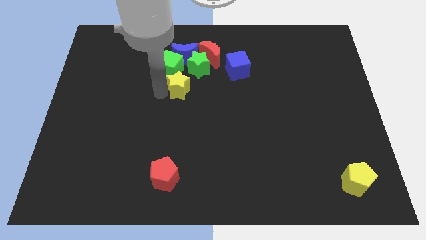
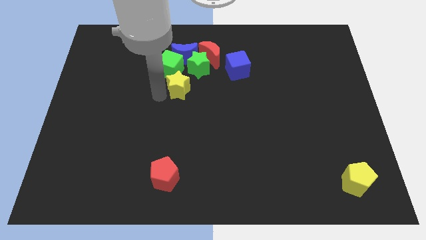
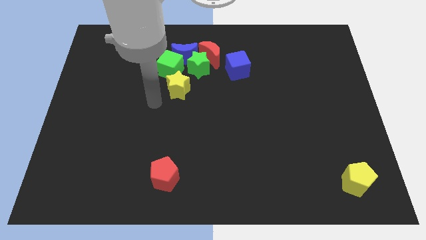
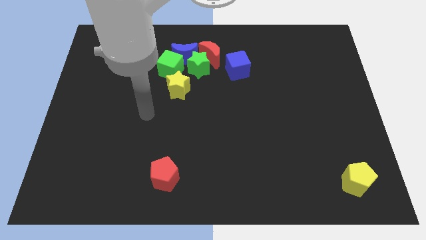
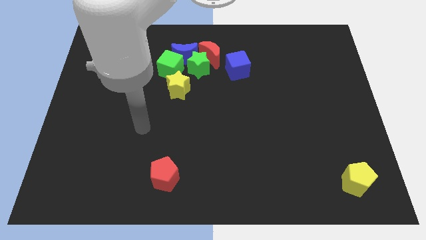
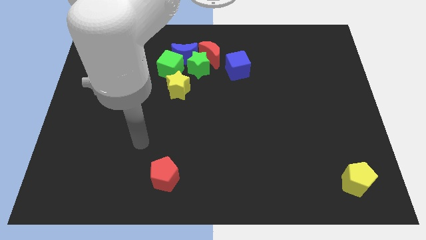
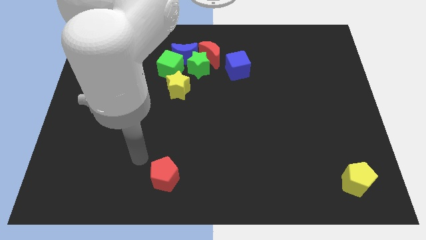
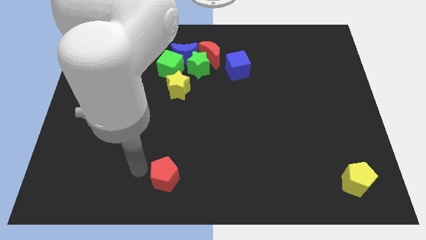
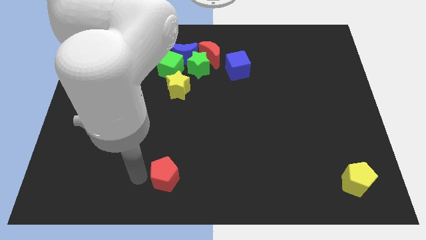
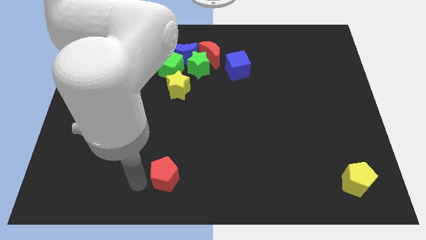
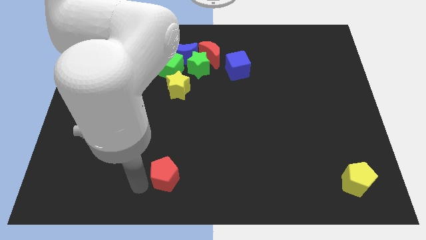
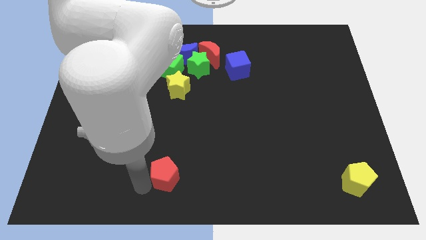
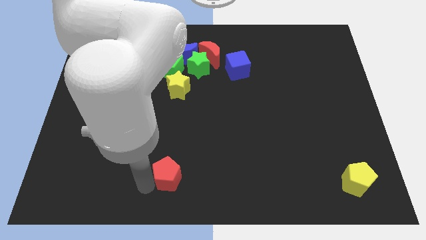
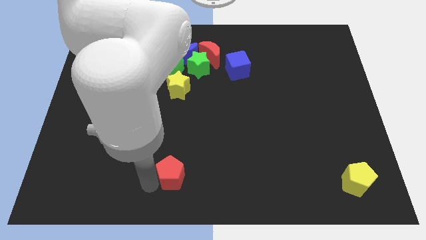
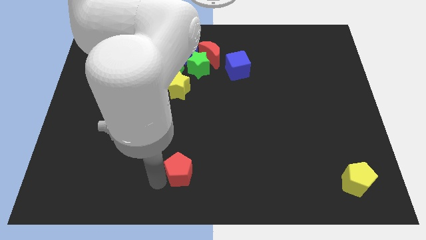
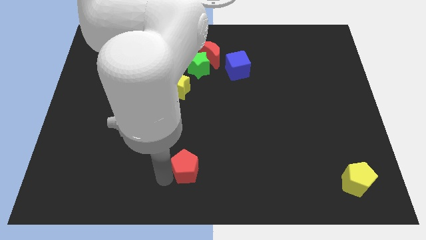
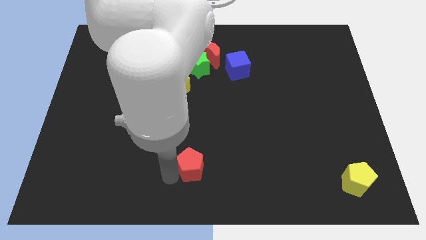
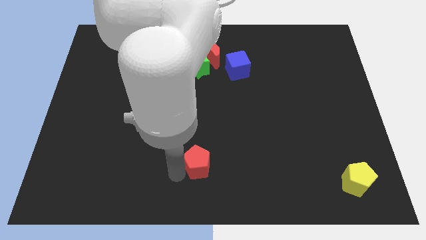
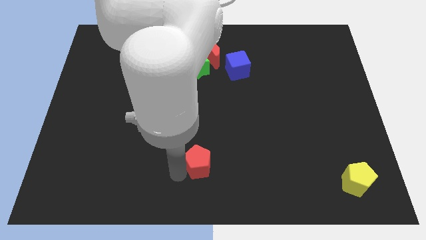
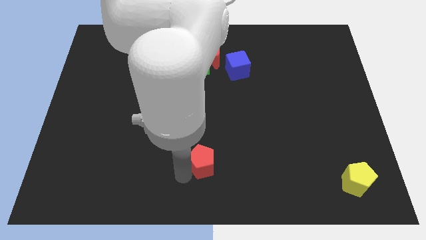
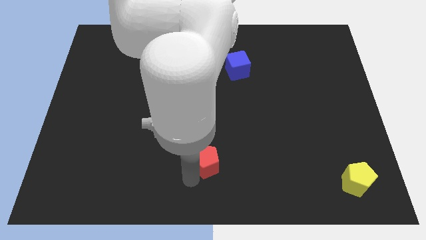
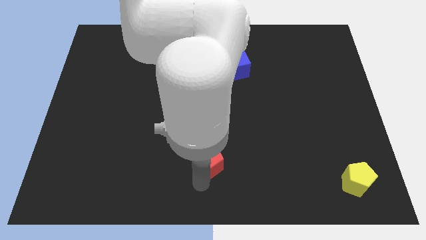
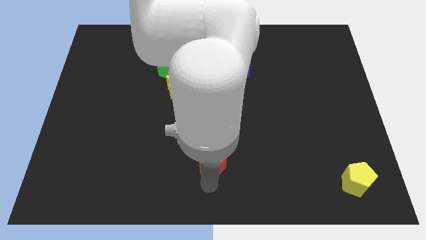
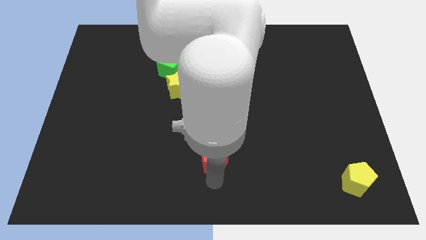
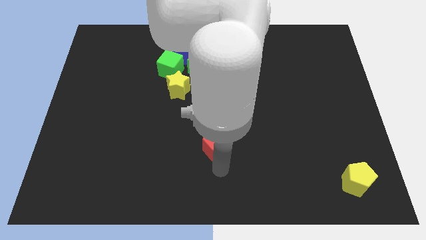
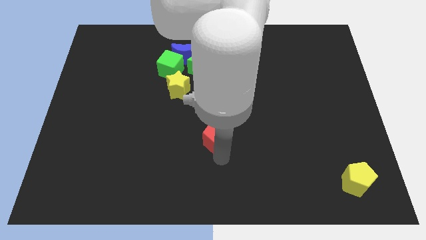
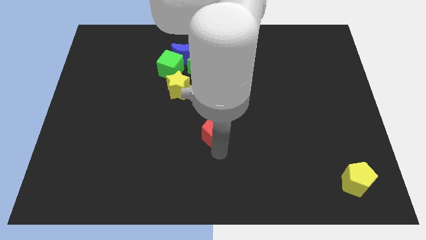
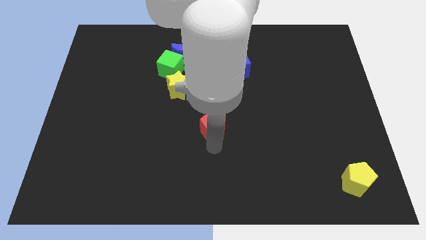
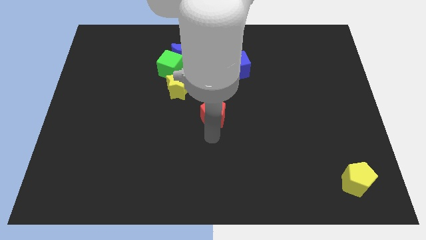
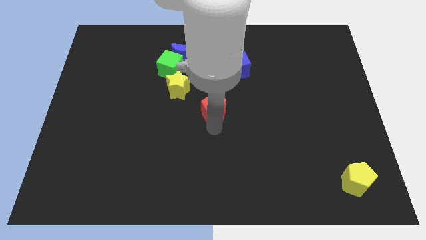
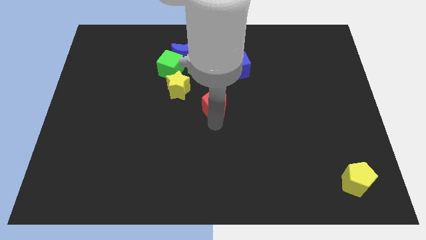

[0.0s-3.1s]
place the red pentagon diagonally to yellow star

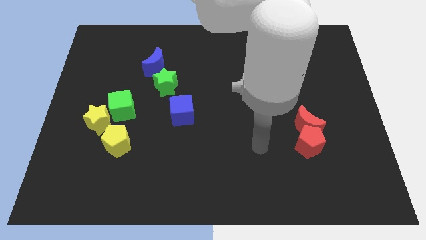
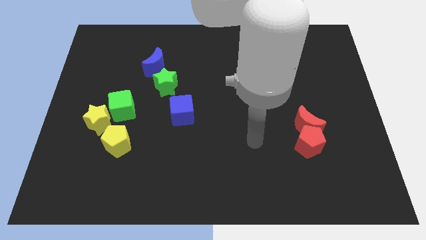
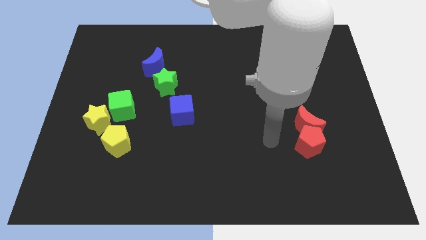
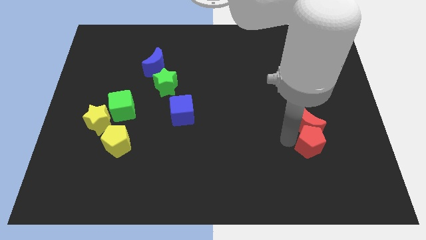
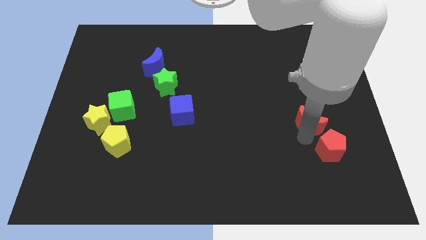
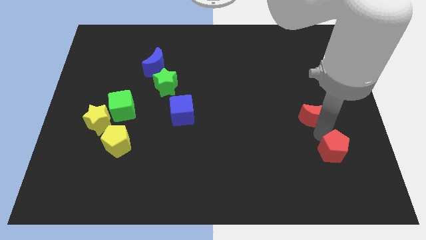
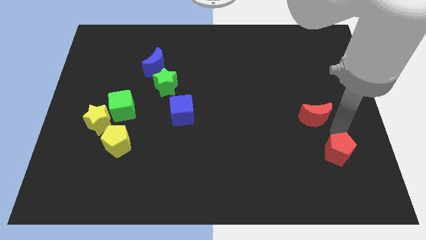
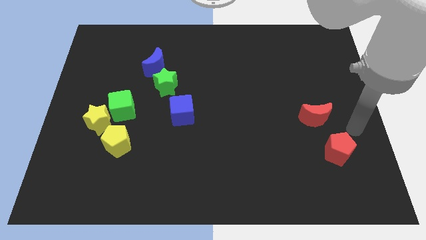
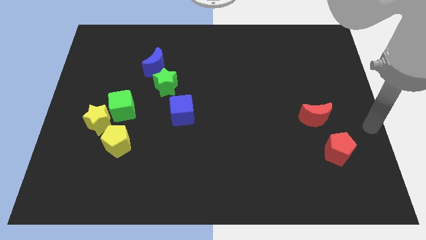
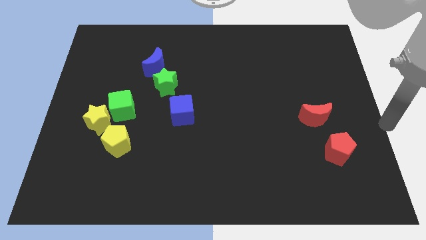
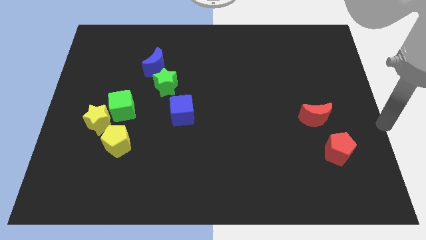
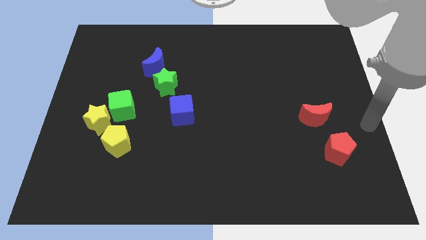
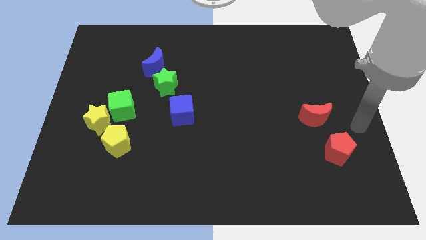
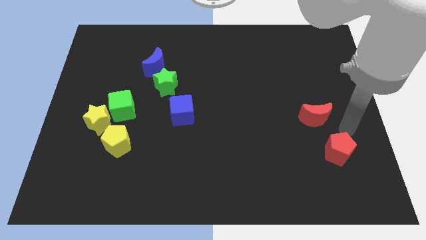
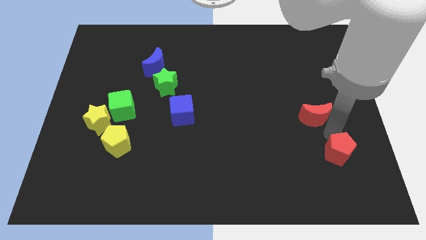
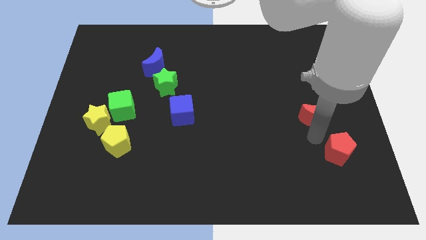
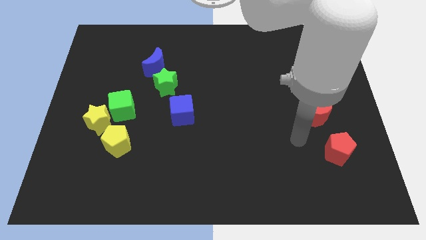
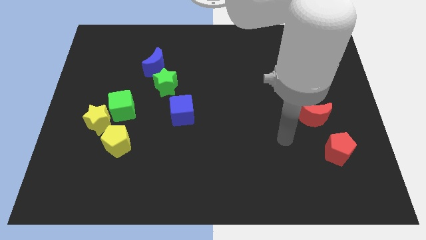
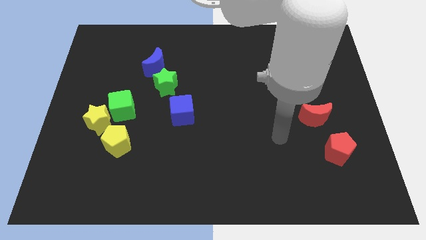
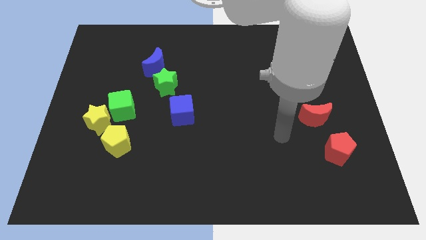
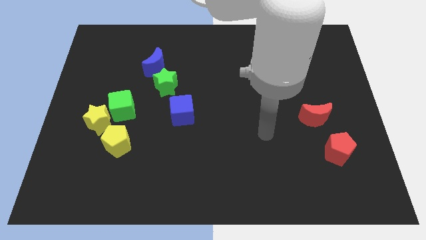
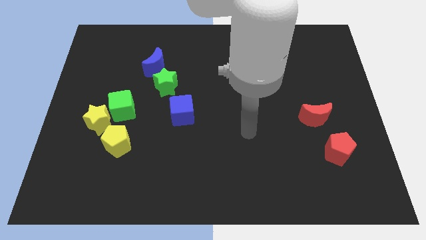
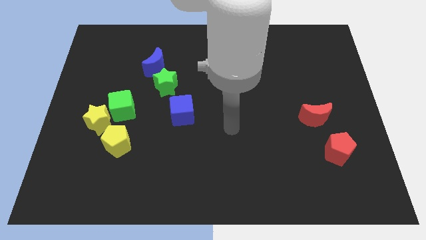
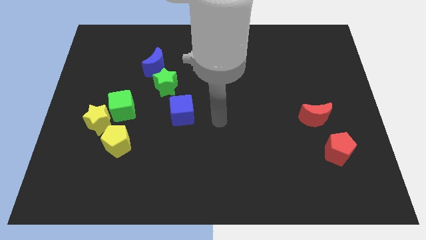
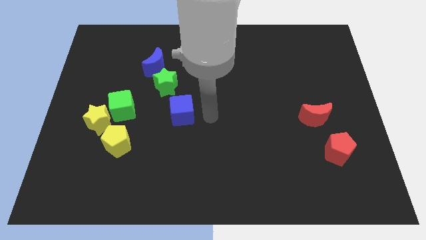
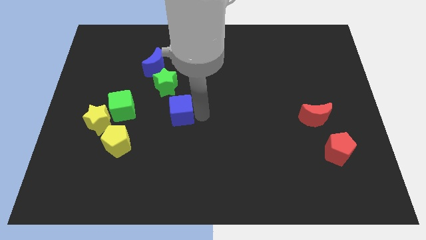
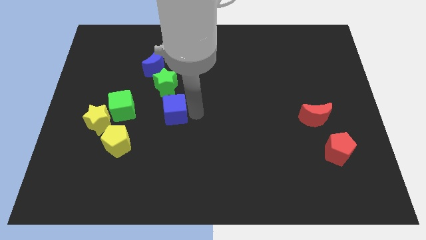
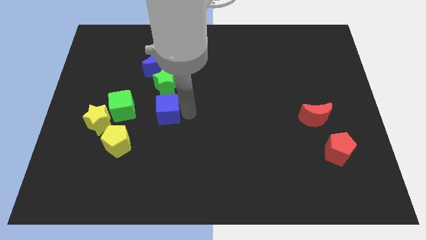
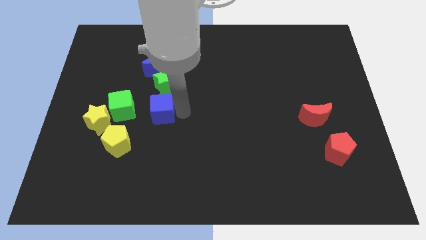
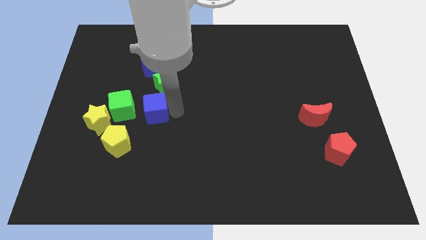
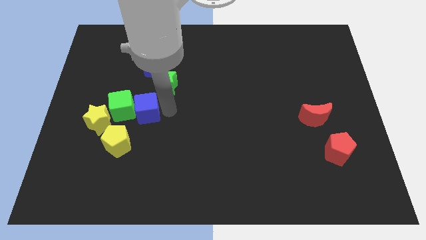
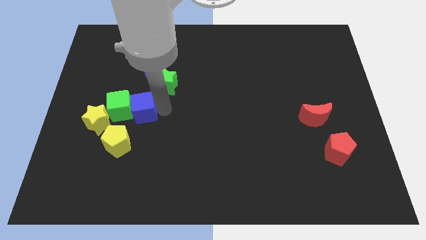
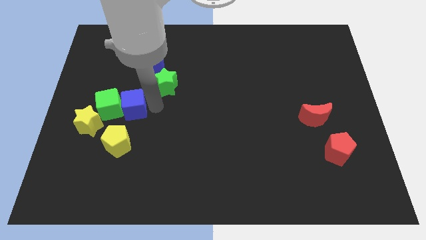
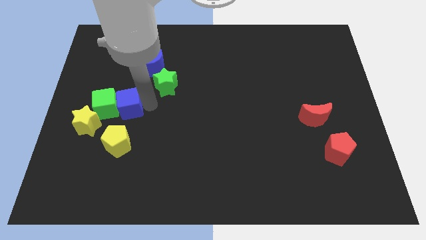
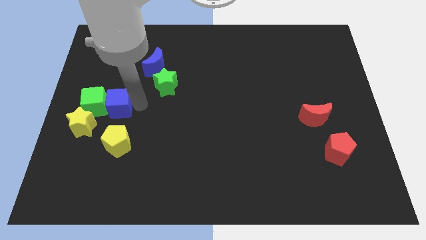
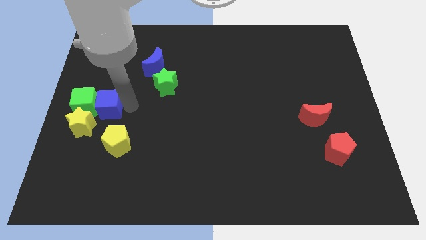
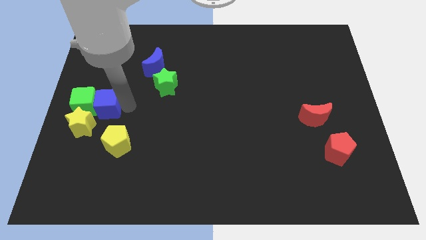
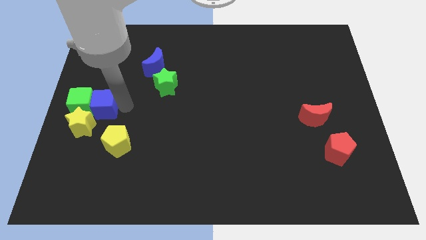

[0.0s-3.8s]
push the blue cube into green cube

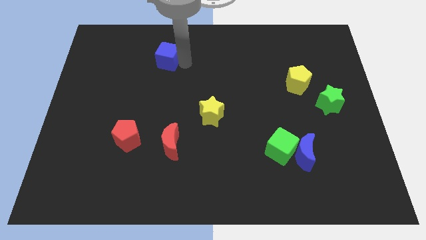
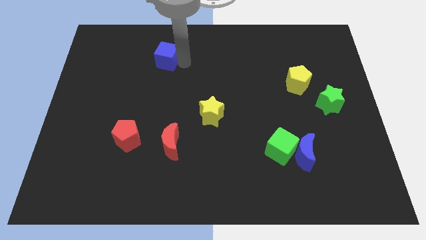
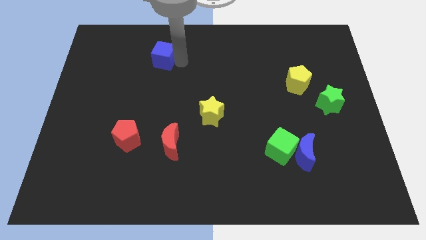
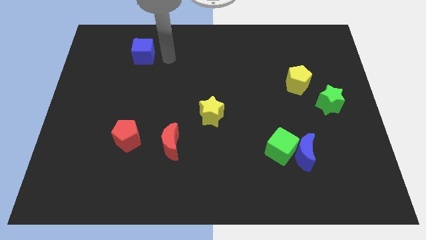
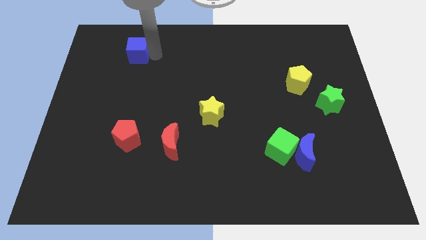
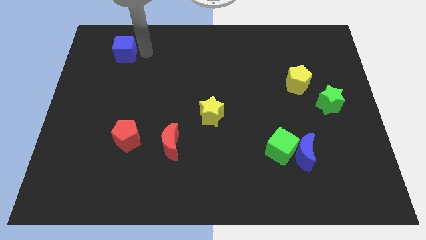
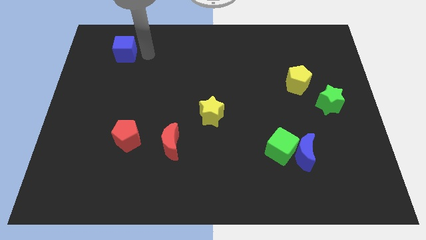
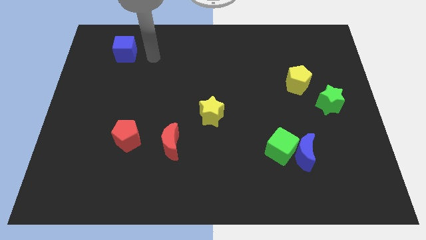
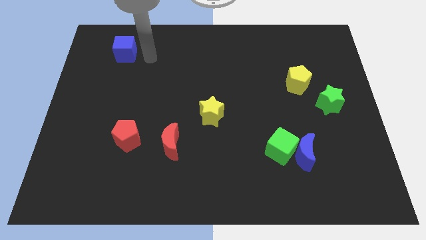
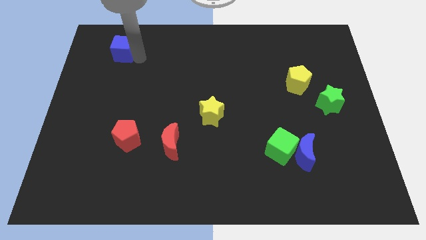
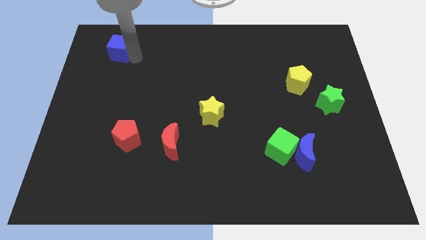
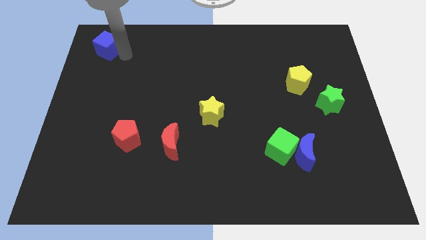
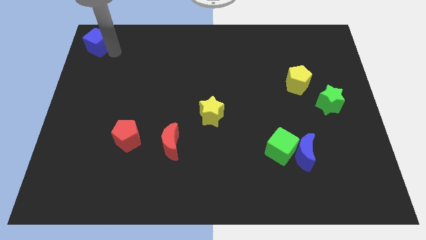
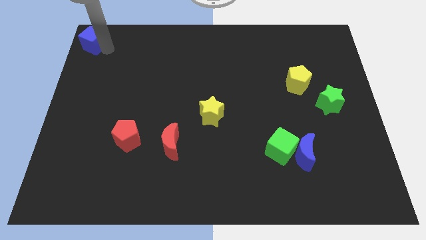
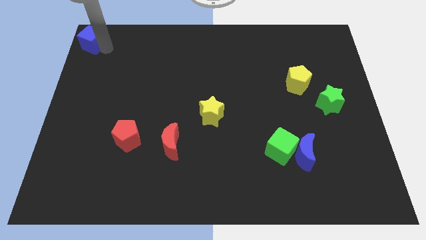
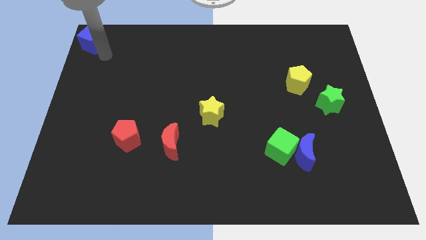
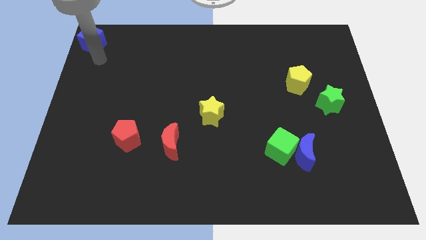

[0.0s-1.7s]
place blue cube to the top left corner of the board

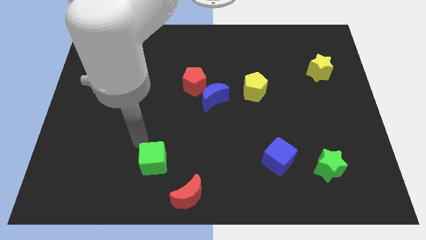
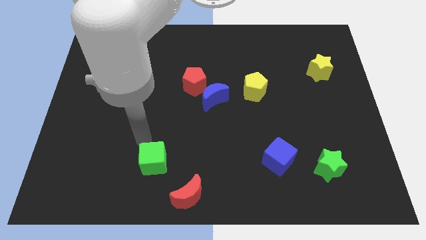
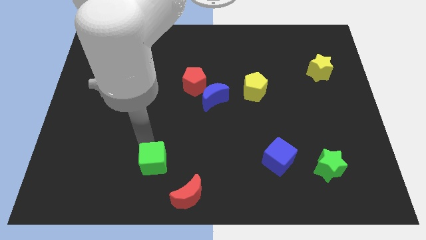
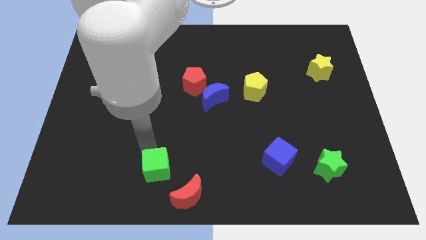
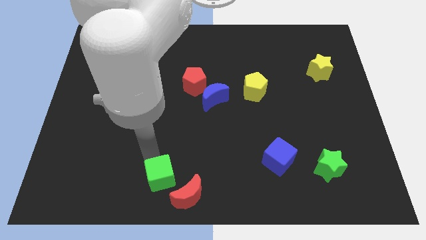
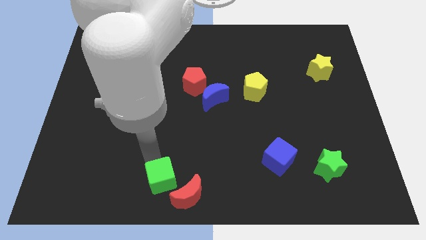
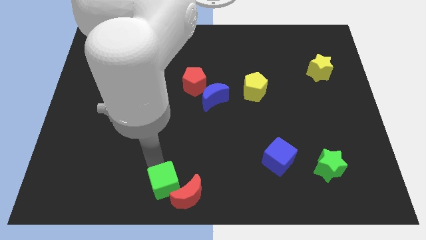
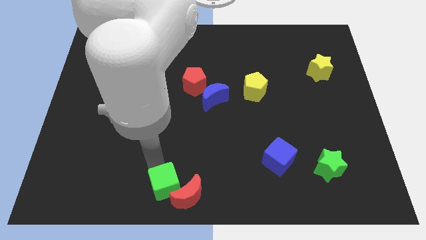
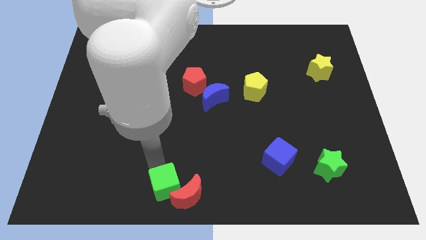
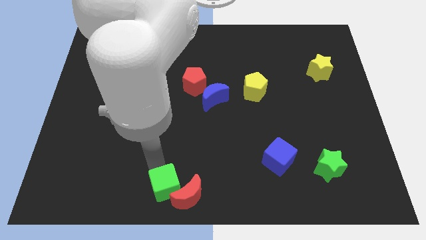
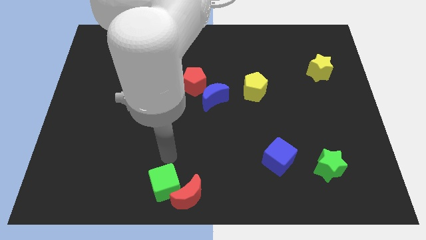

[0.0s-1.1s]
push the green cube into the red crescent
